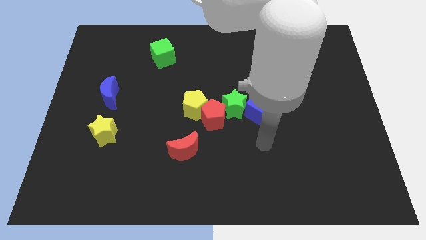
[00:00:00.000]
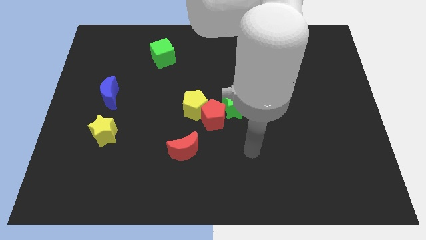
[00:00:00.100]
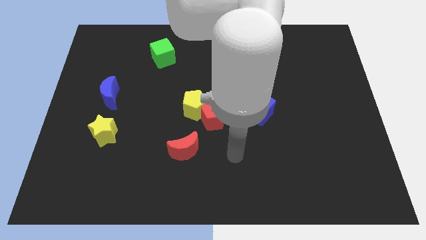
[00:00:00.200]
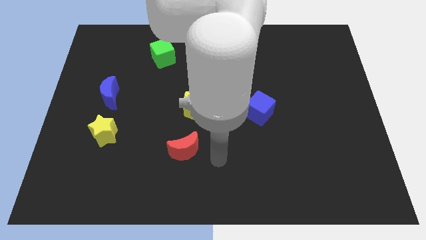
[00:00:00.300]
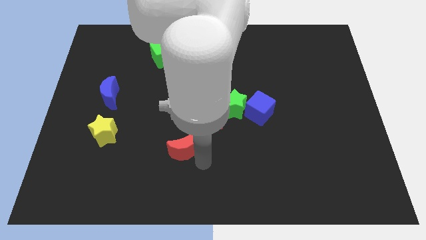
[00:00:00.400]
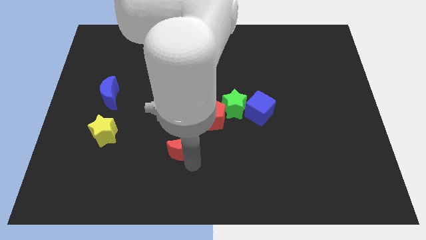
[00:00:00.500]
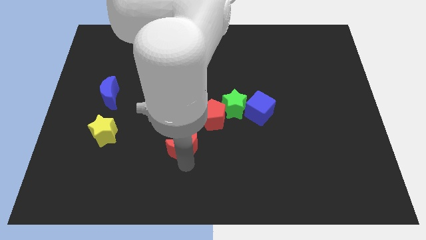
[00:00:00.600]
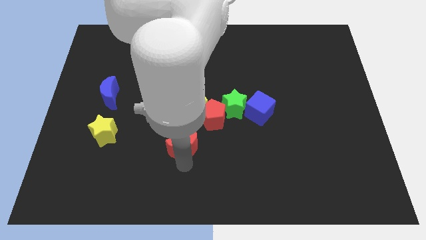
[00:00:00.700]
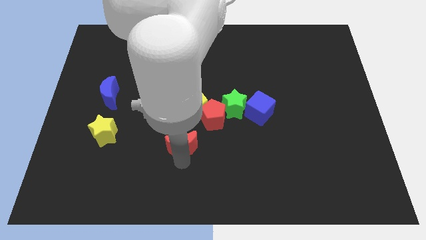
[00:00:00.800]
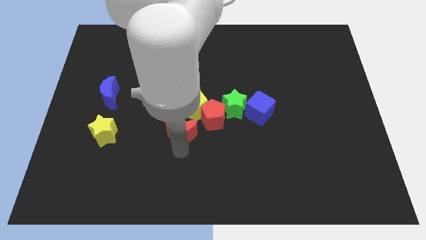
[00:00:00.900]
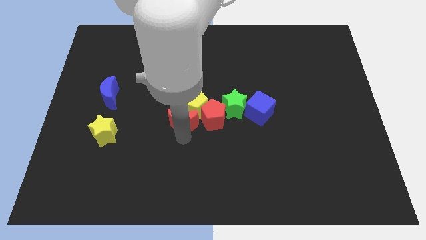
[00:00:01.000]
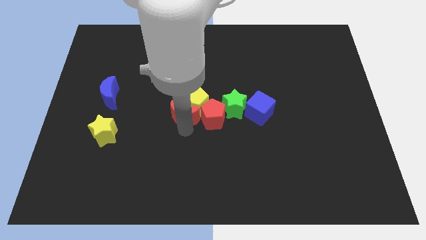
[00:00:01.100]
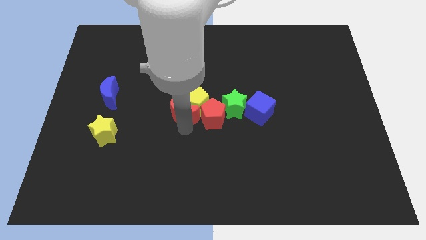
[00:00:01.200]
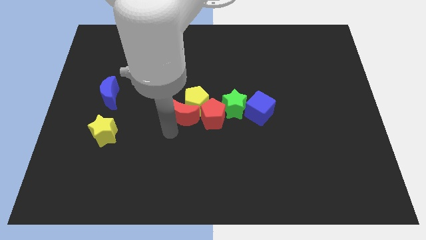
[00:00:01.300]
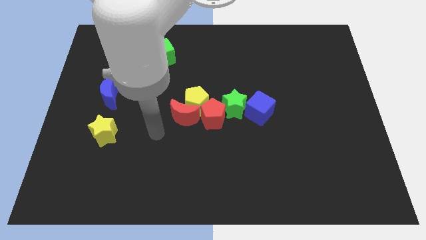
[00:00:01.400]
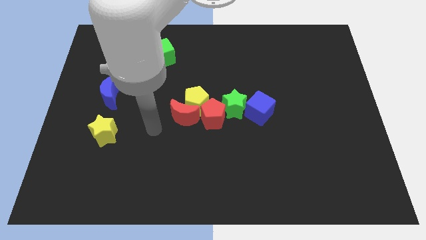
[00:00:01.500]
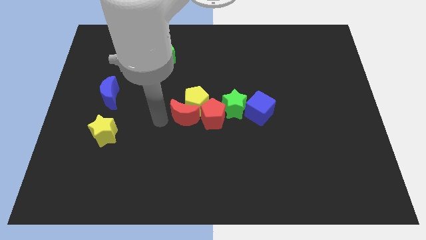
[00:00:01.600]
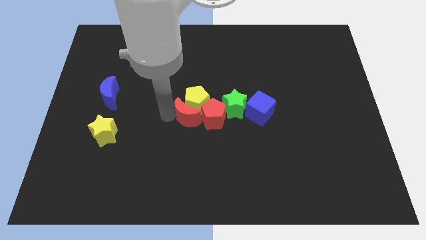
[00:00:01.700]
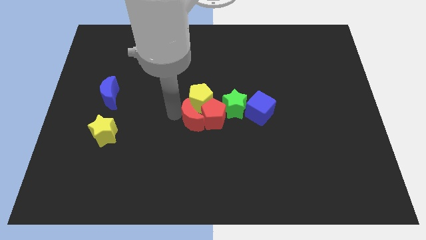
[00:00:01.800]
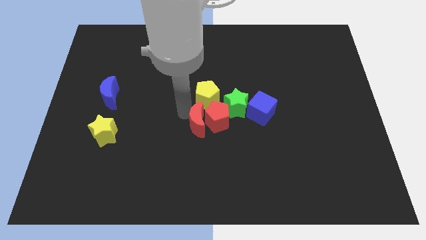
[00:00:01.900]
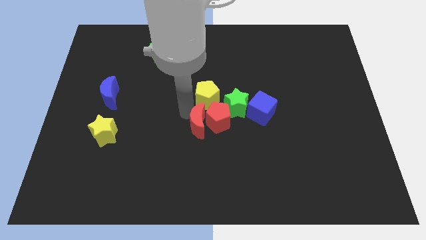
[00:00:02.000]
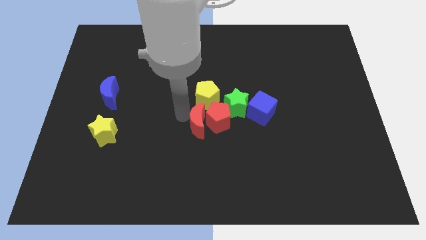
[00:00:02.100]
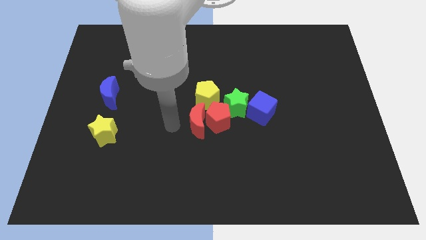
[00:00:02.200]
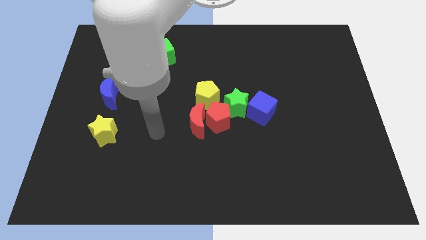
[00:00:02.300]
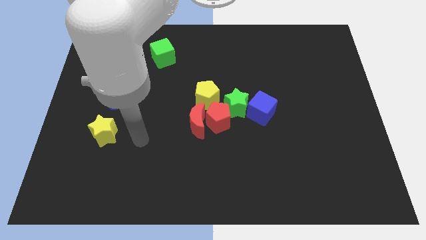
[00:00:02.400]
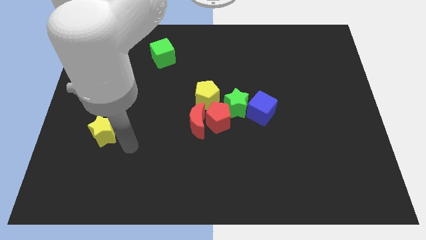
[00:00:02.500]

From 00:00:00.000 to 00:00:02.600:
push the red moon into yellow pentagon

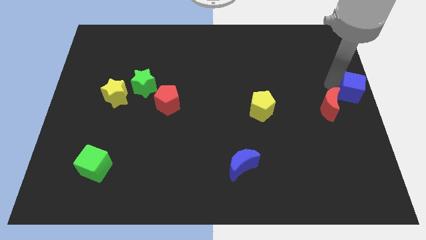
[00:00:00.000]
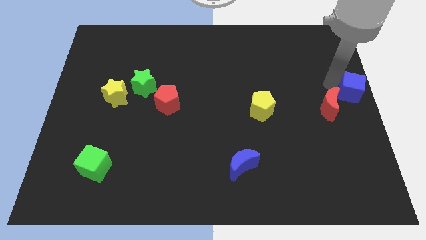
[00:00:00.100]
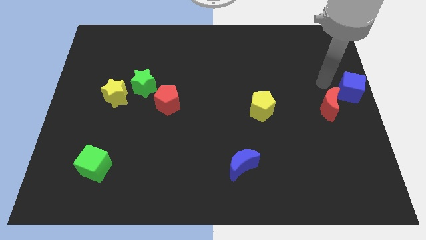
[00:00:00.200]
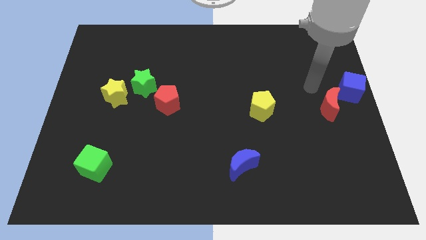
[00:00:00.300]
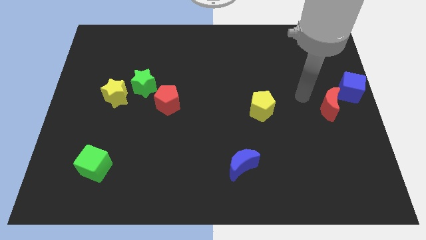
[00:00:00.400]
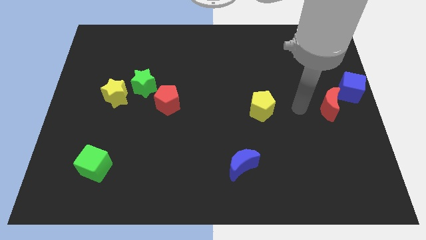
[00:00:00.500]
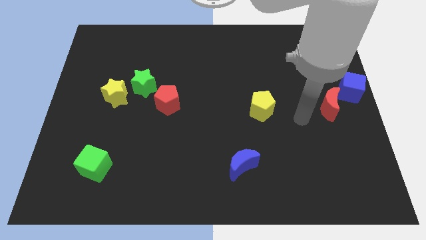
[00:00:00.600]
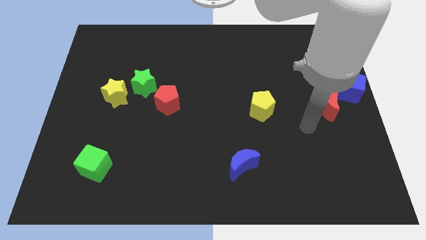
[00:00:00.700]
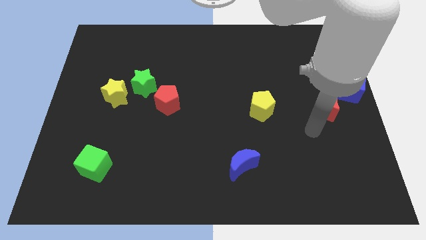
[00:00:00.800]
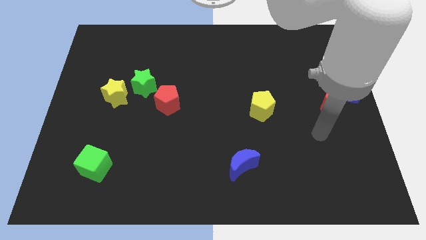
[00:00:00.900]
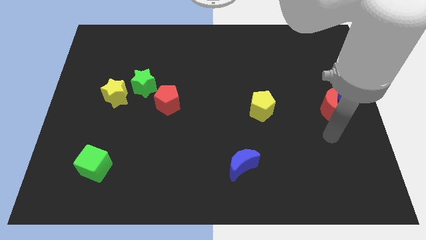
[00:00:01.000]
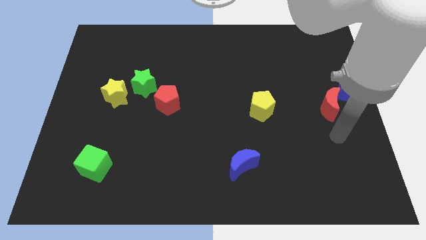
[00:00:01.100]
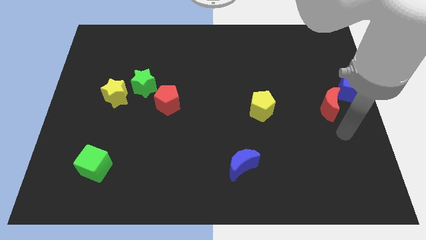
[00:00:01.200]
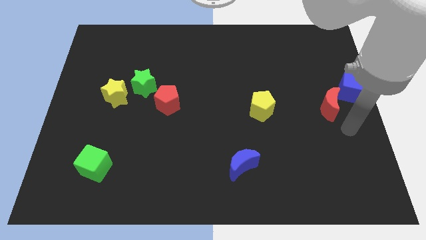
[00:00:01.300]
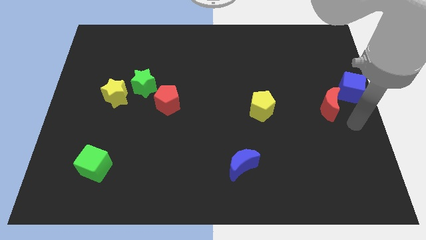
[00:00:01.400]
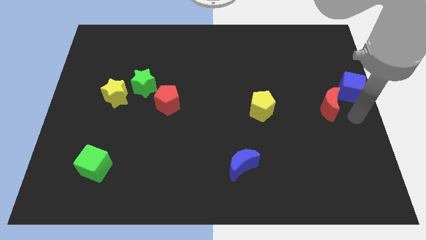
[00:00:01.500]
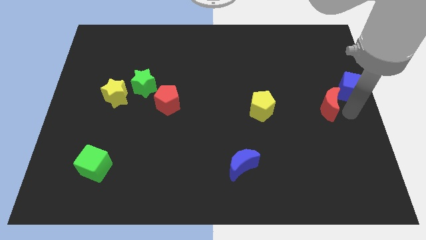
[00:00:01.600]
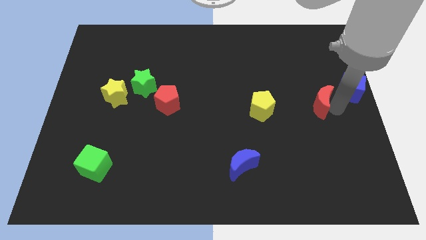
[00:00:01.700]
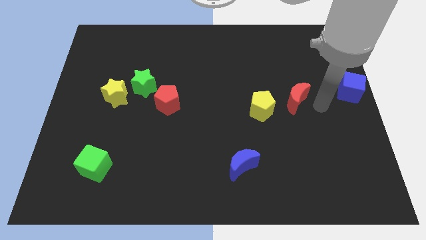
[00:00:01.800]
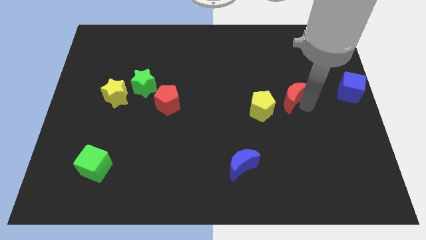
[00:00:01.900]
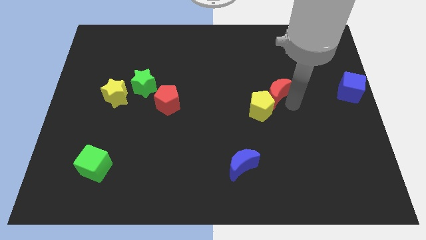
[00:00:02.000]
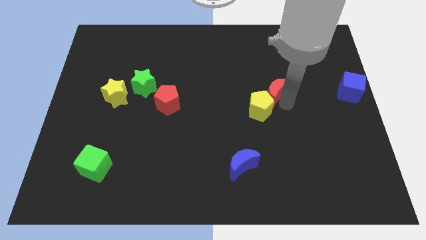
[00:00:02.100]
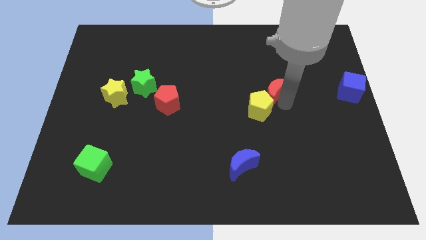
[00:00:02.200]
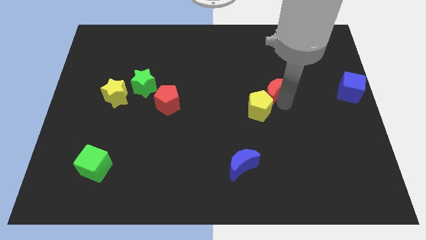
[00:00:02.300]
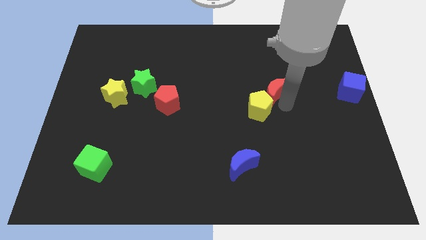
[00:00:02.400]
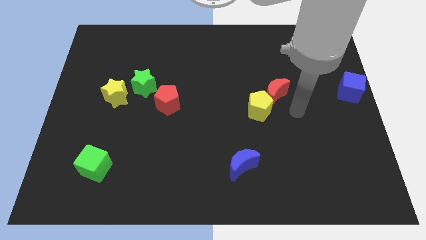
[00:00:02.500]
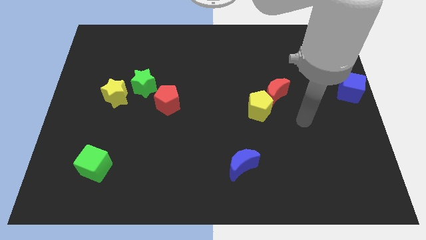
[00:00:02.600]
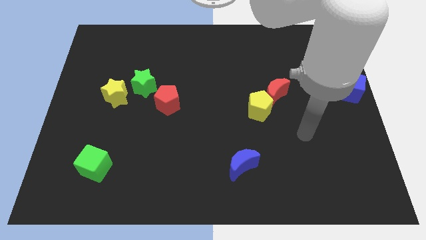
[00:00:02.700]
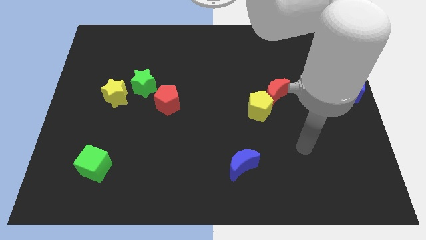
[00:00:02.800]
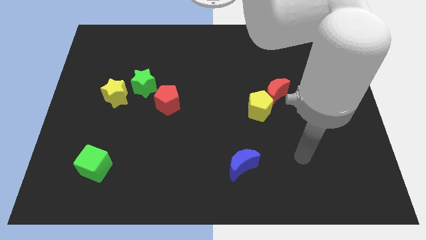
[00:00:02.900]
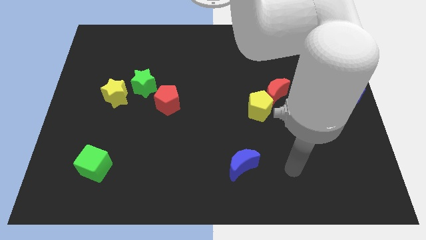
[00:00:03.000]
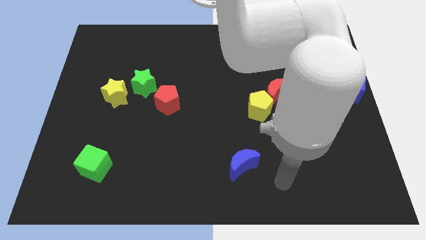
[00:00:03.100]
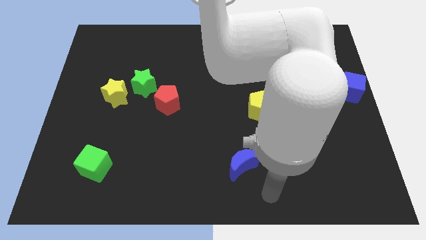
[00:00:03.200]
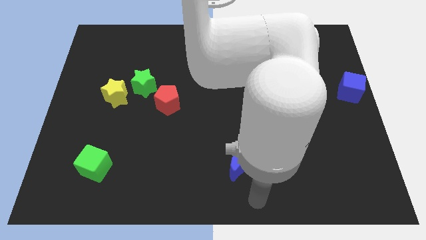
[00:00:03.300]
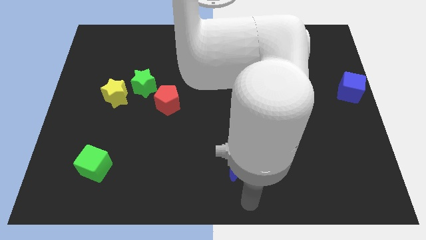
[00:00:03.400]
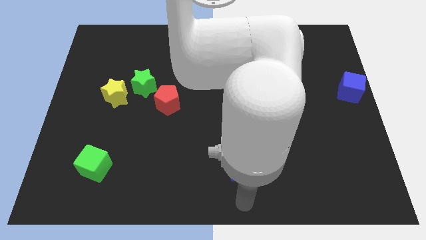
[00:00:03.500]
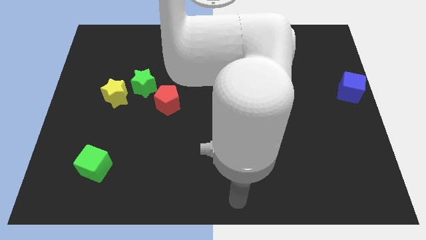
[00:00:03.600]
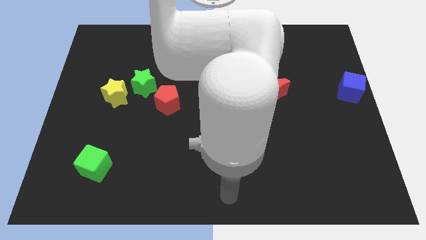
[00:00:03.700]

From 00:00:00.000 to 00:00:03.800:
move the red moon right above the yellow pentagon

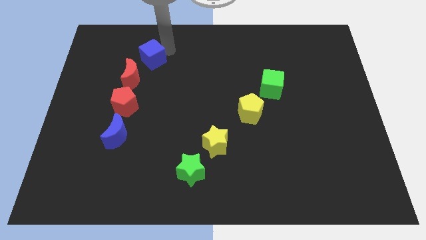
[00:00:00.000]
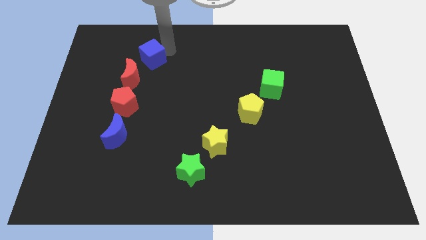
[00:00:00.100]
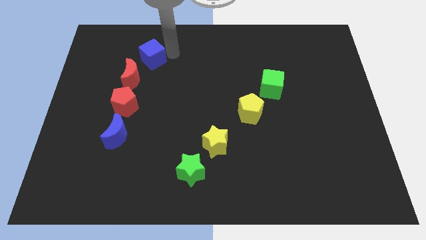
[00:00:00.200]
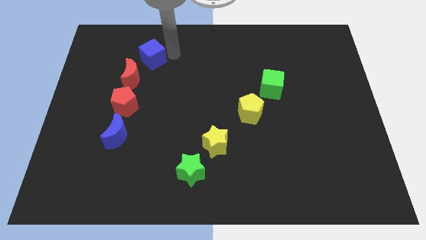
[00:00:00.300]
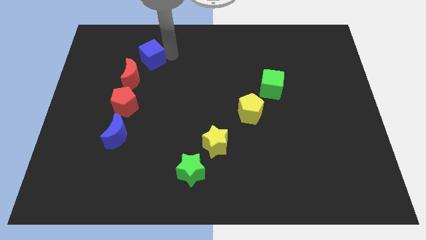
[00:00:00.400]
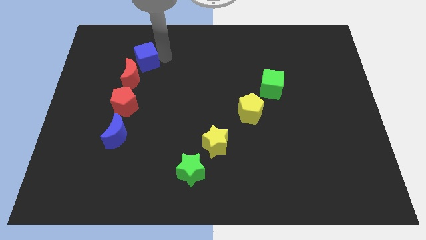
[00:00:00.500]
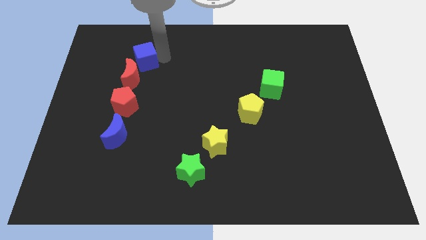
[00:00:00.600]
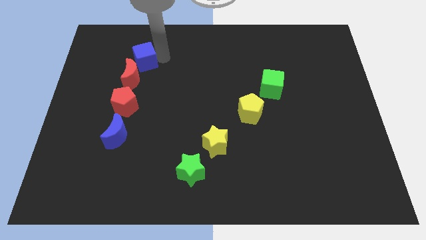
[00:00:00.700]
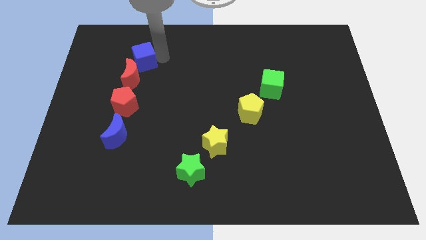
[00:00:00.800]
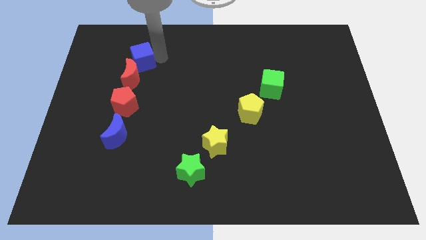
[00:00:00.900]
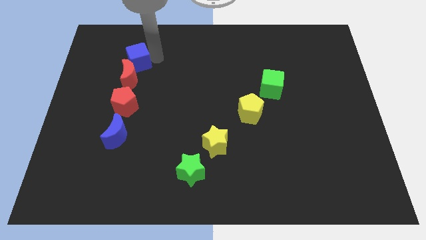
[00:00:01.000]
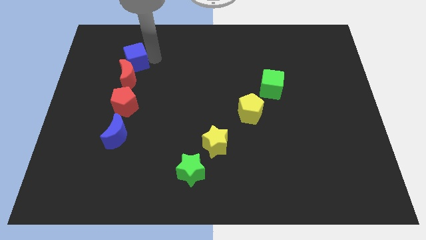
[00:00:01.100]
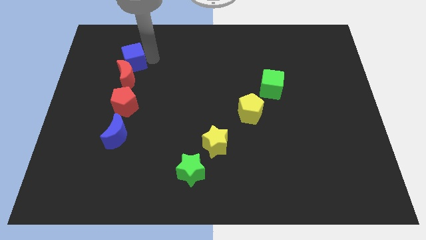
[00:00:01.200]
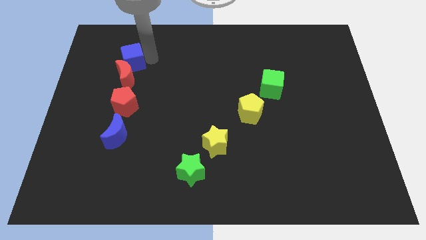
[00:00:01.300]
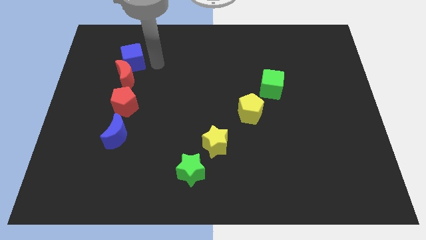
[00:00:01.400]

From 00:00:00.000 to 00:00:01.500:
place blue cube to the top of red moon

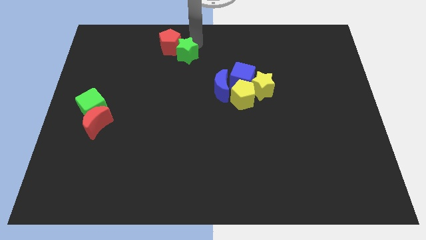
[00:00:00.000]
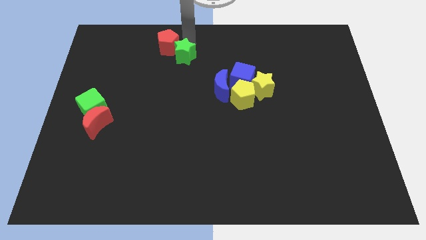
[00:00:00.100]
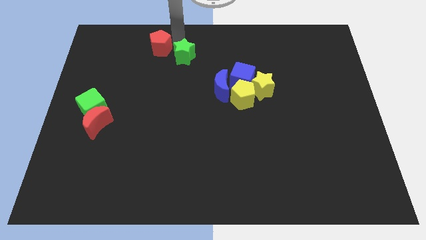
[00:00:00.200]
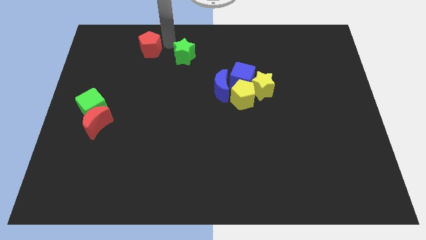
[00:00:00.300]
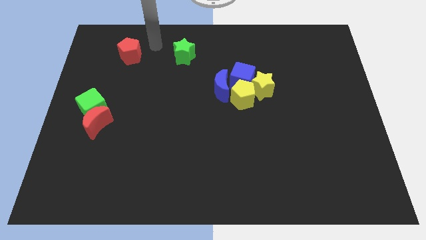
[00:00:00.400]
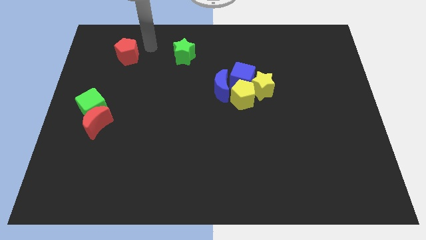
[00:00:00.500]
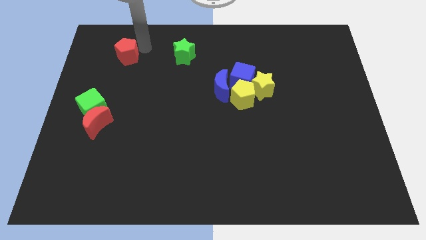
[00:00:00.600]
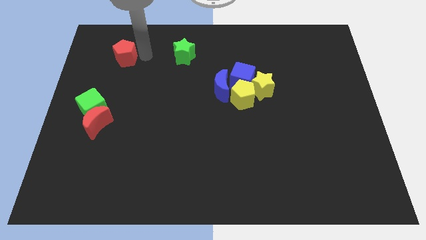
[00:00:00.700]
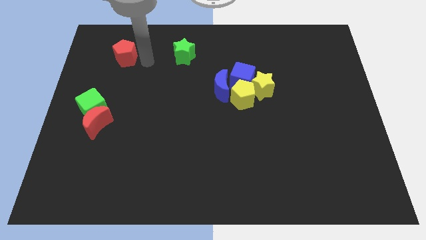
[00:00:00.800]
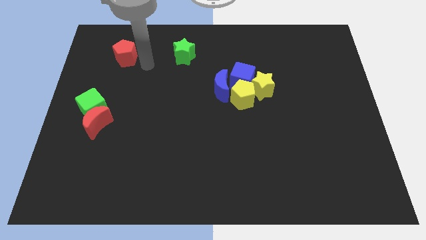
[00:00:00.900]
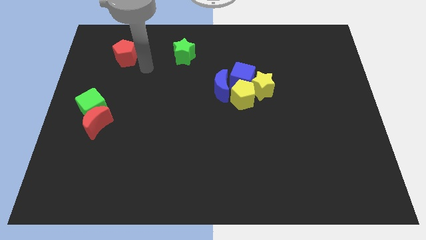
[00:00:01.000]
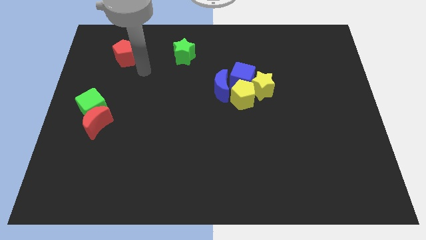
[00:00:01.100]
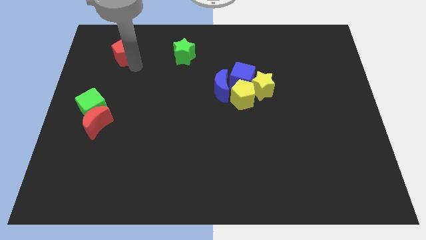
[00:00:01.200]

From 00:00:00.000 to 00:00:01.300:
take the red pentagon away from the green star
